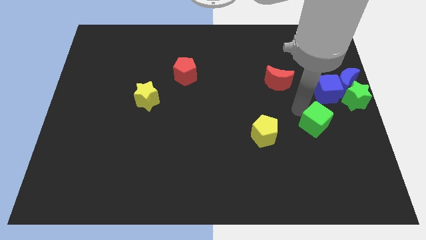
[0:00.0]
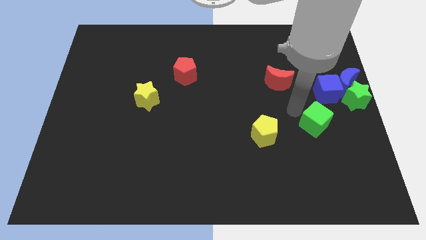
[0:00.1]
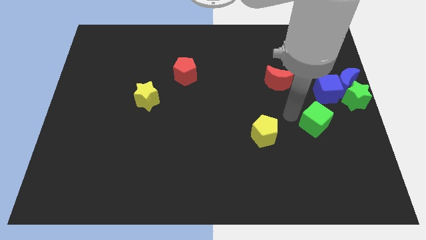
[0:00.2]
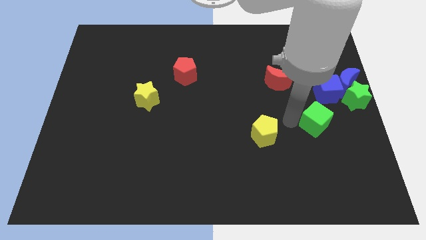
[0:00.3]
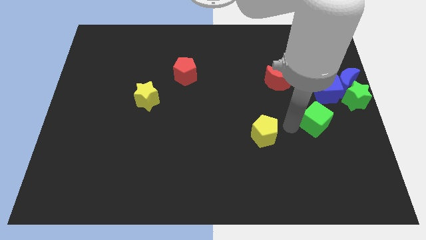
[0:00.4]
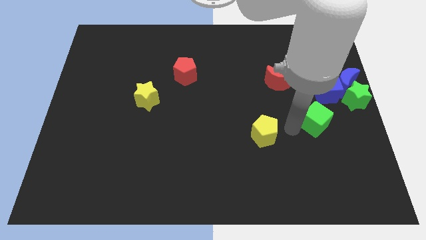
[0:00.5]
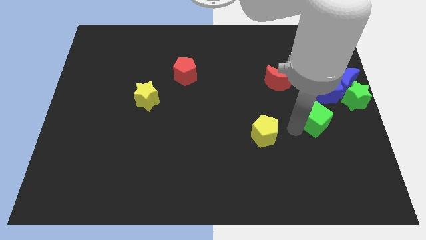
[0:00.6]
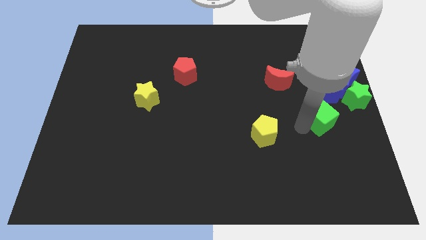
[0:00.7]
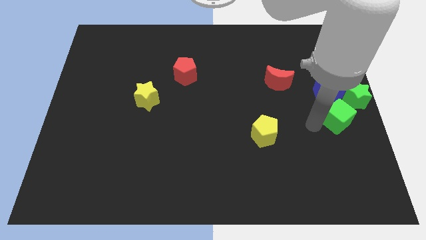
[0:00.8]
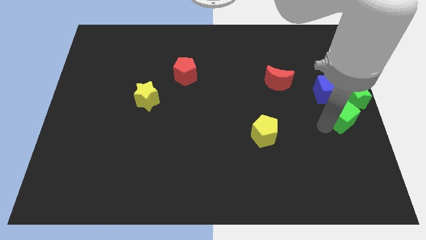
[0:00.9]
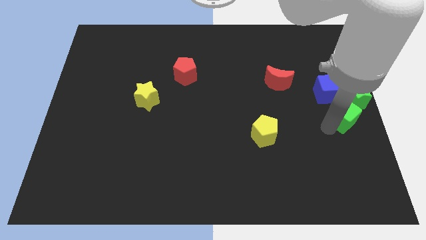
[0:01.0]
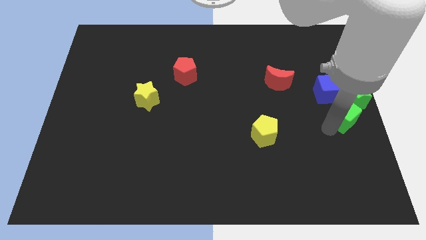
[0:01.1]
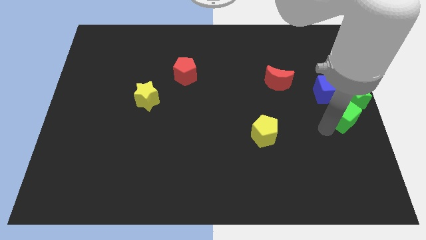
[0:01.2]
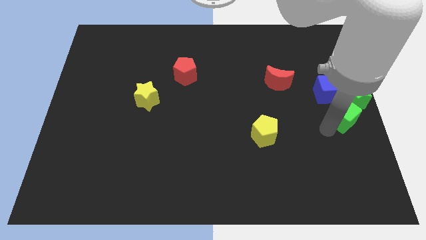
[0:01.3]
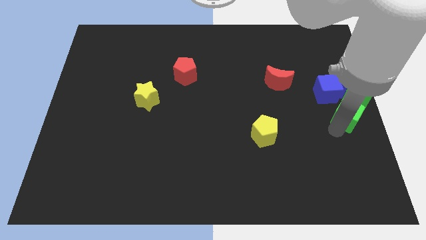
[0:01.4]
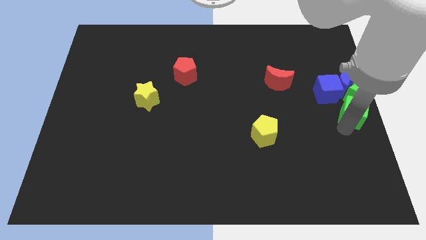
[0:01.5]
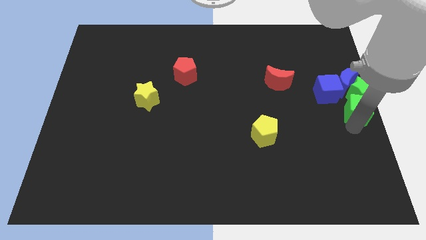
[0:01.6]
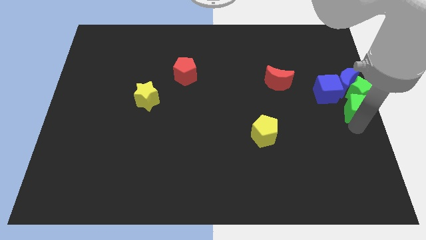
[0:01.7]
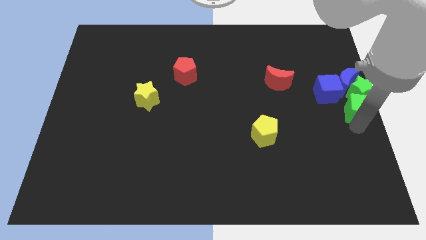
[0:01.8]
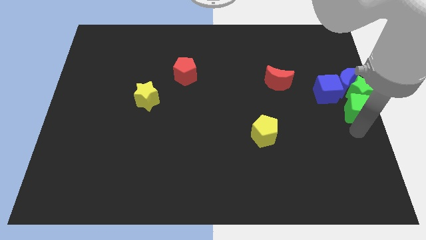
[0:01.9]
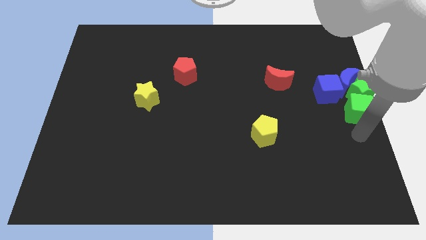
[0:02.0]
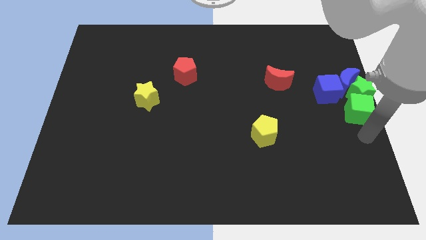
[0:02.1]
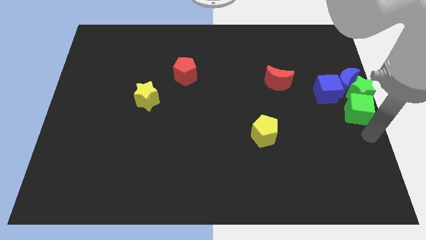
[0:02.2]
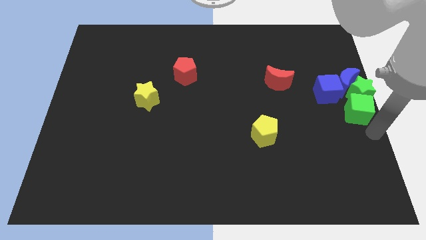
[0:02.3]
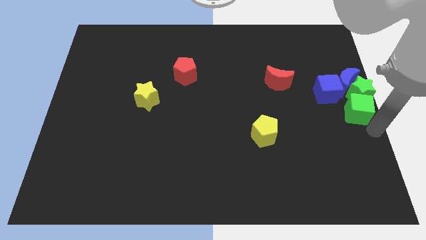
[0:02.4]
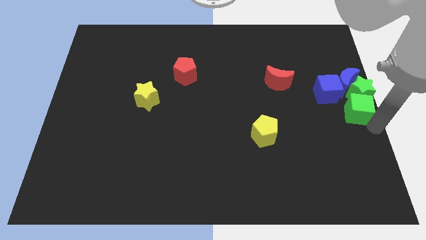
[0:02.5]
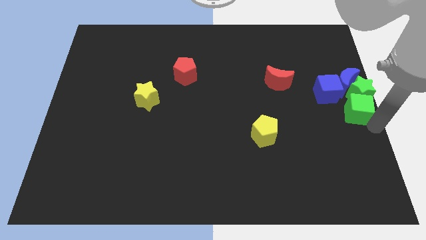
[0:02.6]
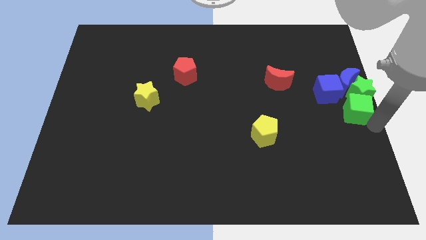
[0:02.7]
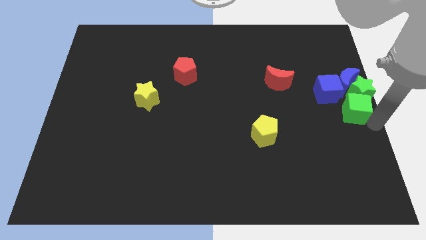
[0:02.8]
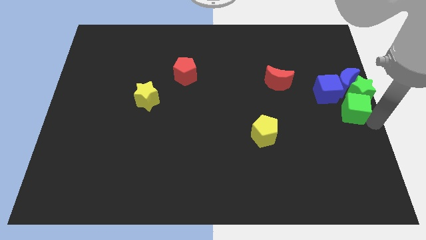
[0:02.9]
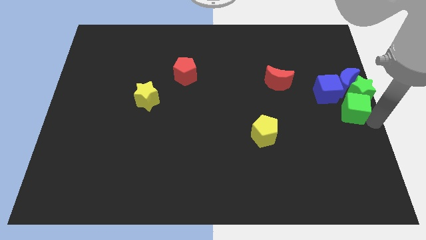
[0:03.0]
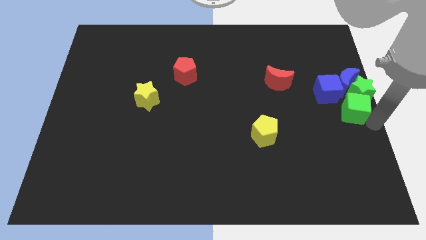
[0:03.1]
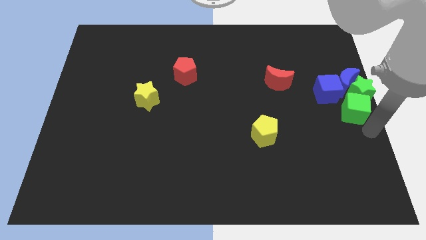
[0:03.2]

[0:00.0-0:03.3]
place the green cube below the group of blocks

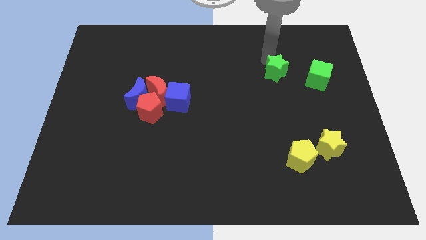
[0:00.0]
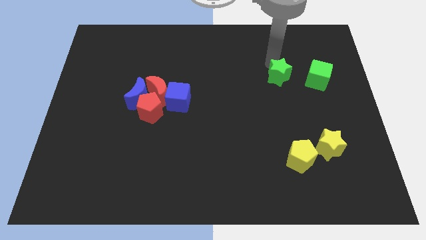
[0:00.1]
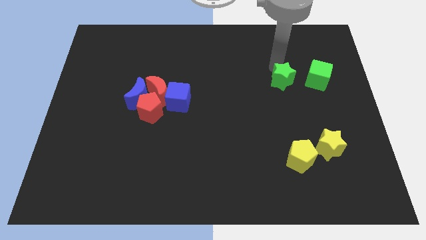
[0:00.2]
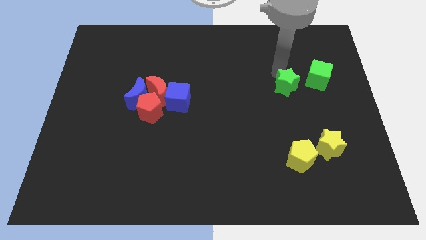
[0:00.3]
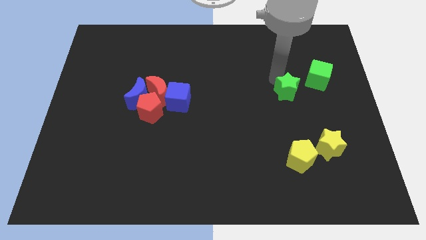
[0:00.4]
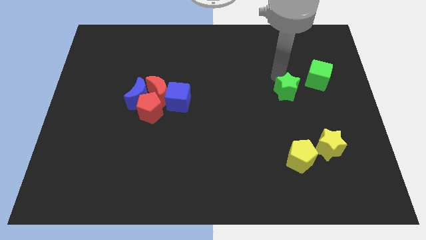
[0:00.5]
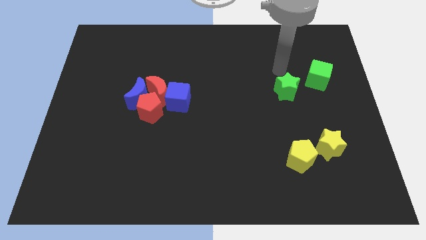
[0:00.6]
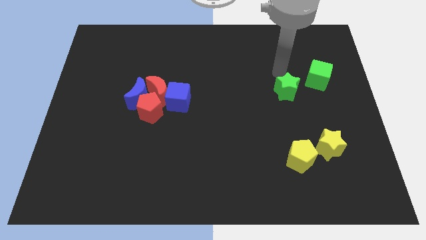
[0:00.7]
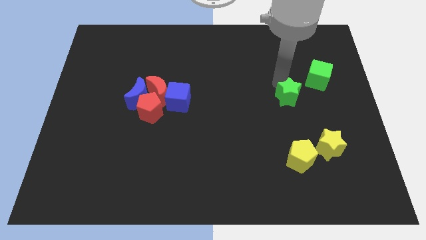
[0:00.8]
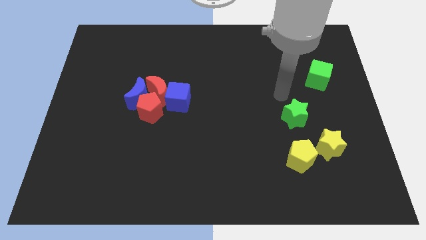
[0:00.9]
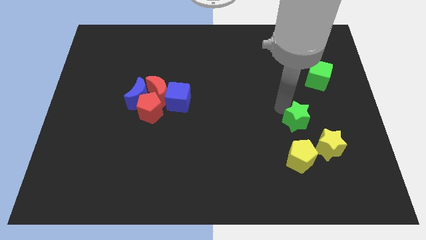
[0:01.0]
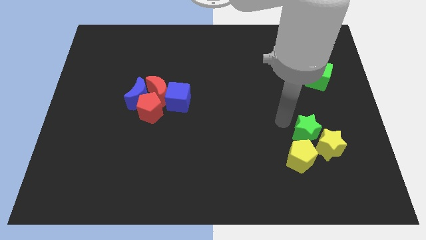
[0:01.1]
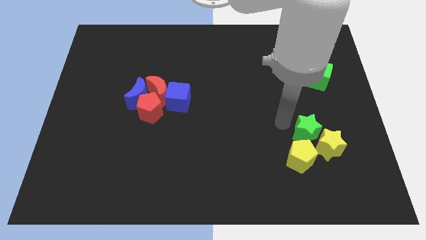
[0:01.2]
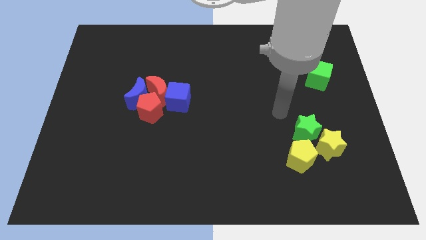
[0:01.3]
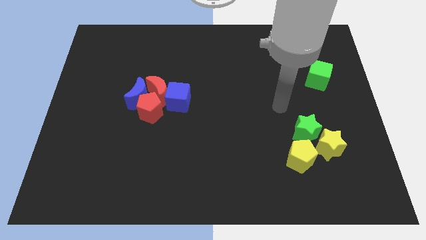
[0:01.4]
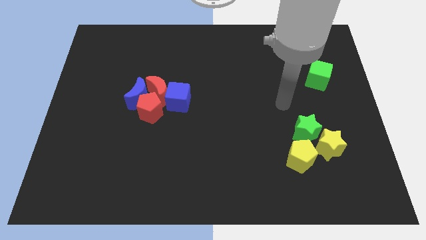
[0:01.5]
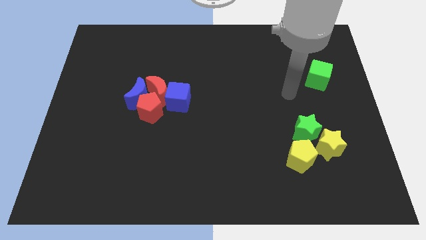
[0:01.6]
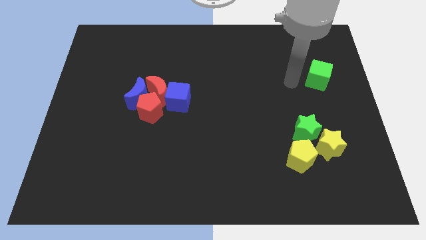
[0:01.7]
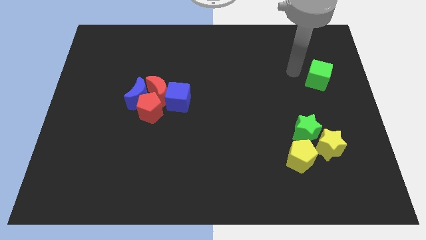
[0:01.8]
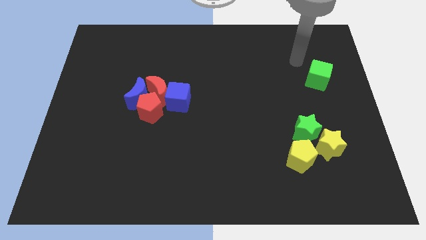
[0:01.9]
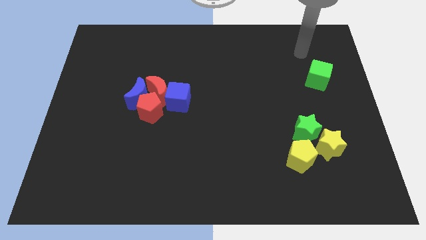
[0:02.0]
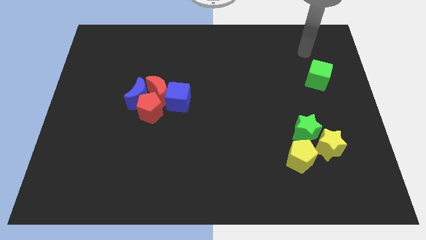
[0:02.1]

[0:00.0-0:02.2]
move the green star above the yellow blocks

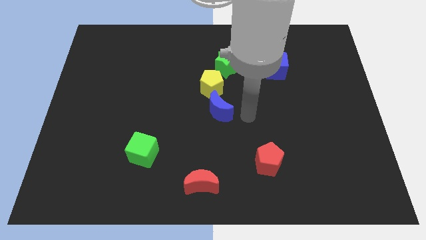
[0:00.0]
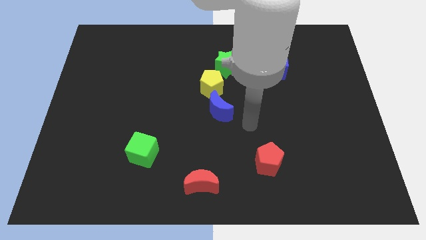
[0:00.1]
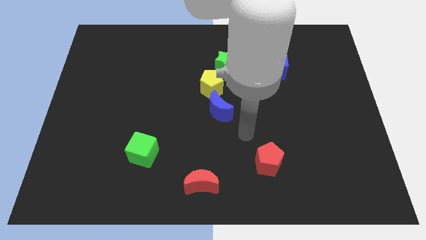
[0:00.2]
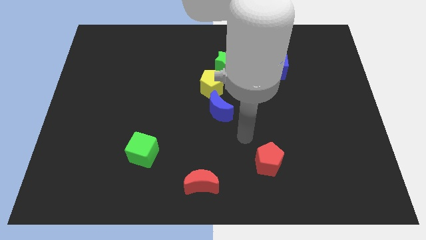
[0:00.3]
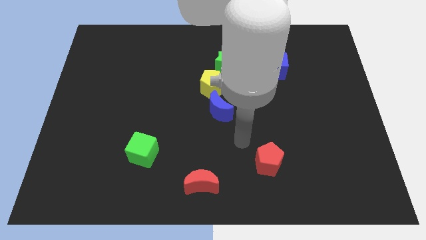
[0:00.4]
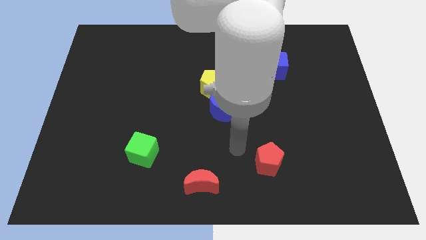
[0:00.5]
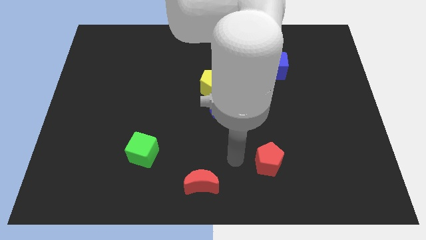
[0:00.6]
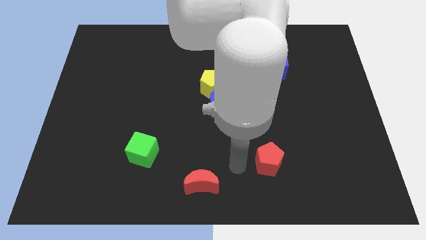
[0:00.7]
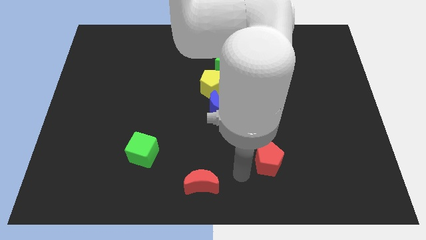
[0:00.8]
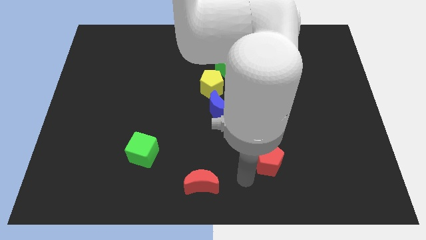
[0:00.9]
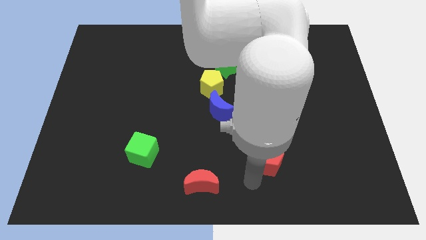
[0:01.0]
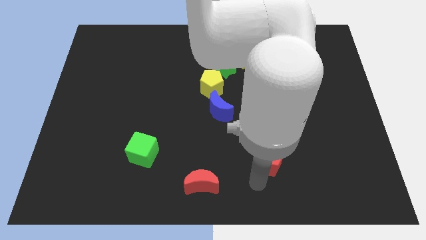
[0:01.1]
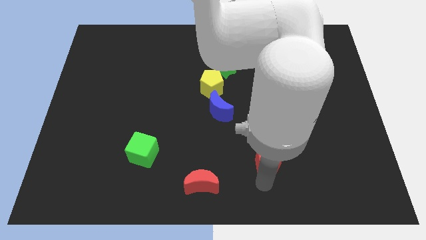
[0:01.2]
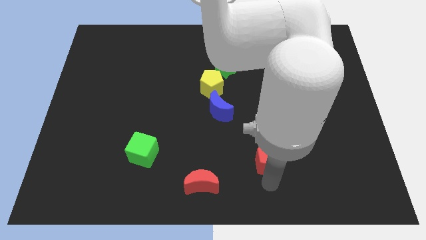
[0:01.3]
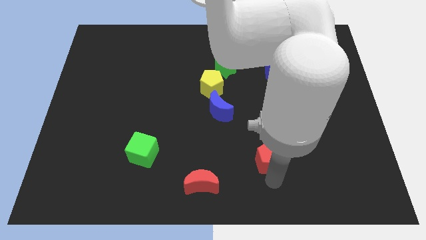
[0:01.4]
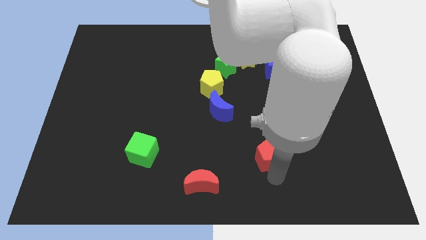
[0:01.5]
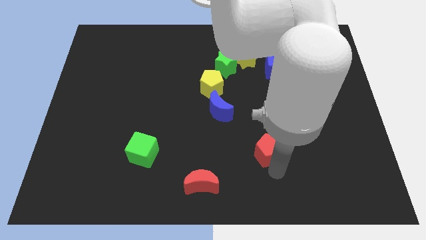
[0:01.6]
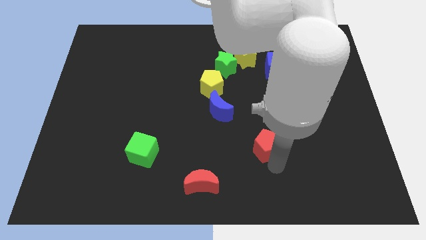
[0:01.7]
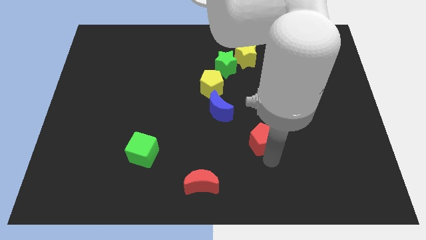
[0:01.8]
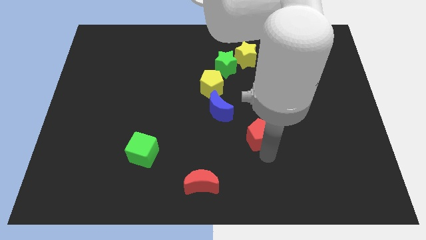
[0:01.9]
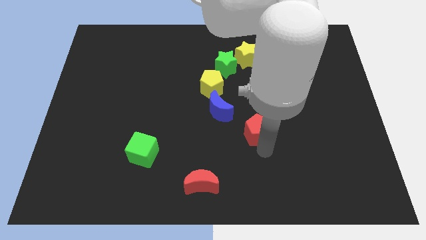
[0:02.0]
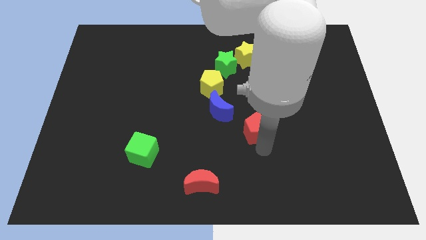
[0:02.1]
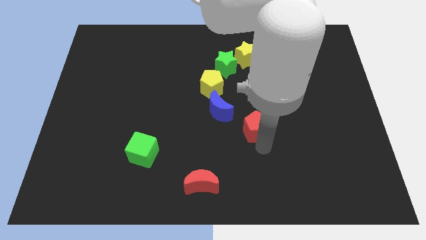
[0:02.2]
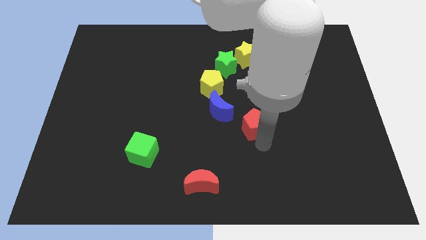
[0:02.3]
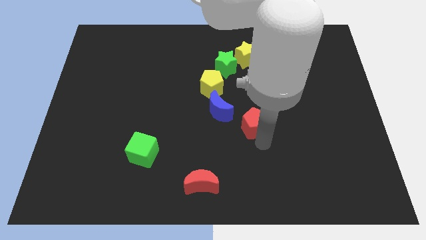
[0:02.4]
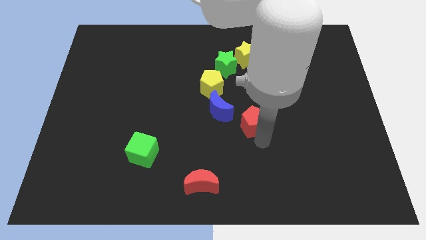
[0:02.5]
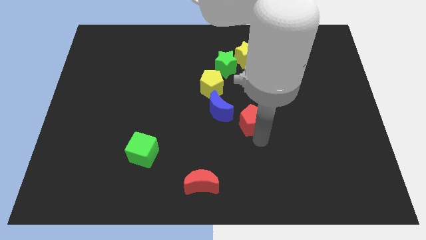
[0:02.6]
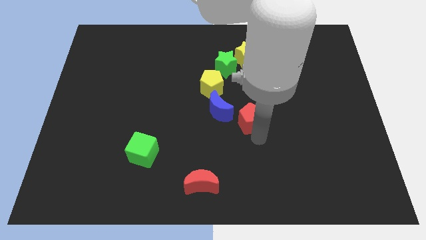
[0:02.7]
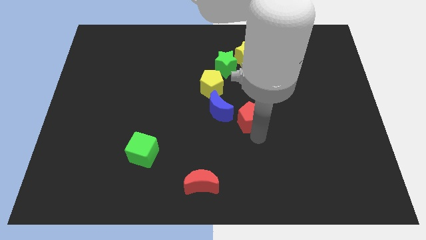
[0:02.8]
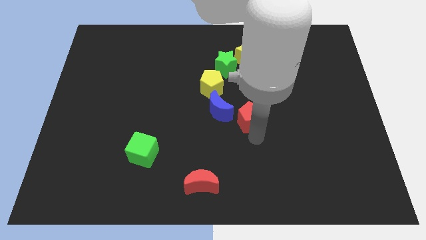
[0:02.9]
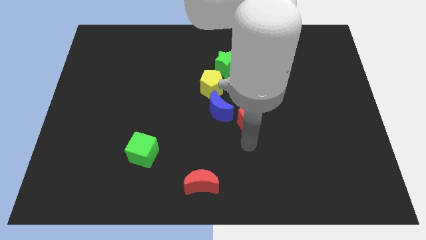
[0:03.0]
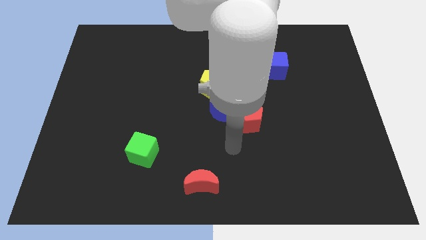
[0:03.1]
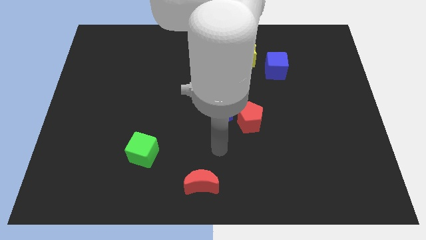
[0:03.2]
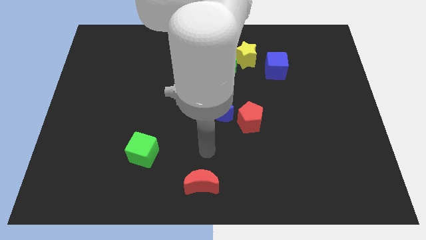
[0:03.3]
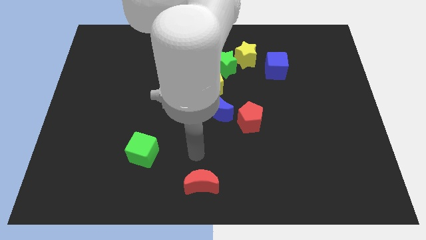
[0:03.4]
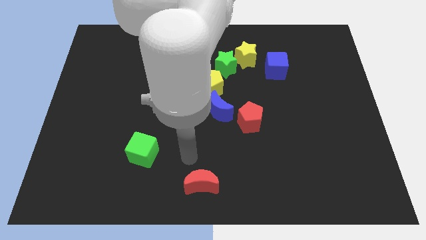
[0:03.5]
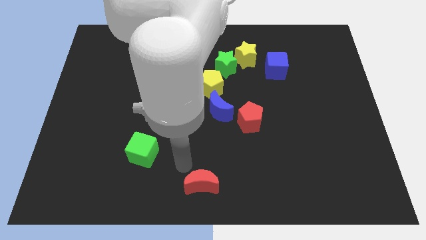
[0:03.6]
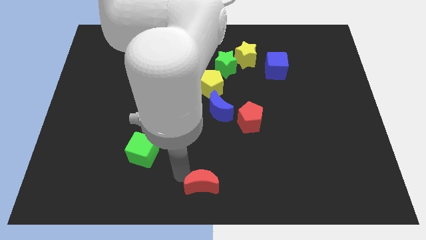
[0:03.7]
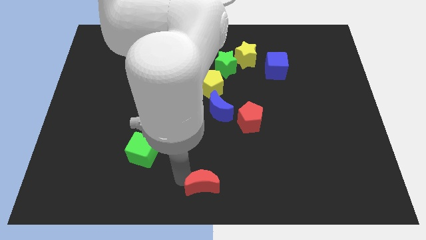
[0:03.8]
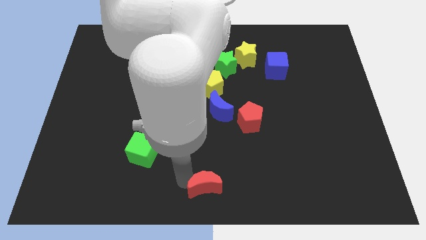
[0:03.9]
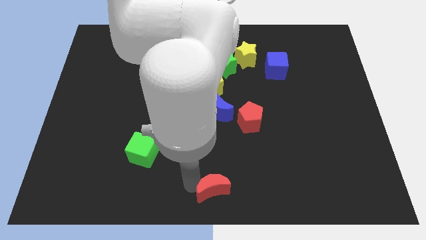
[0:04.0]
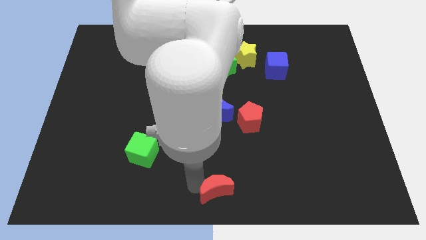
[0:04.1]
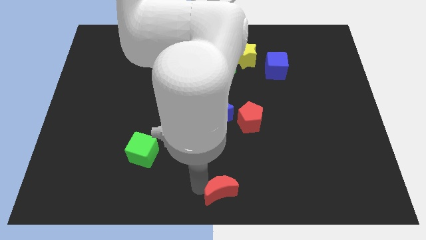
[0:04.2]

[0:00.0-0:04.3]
move red pentagon slightly up
